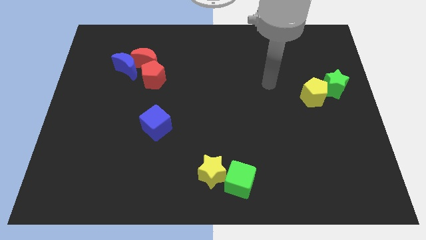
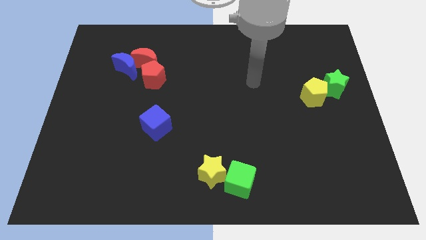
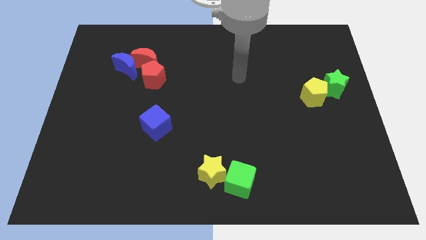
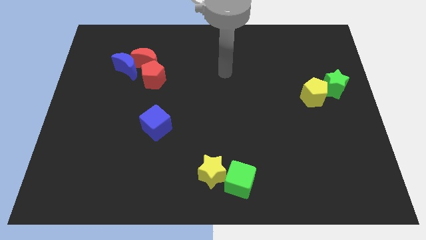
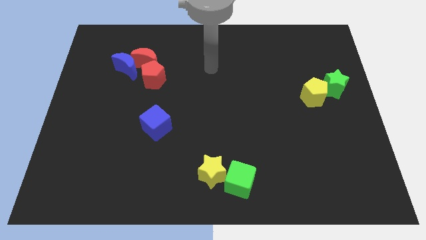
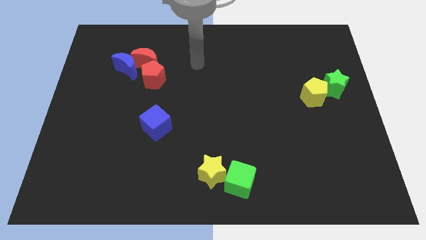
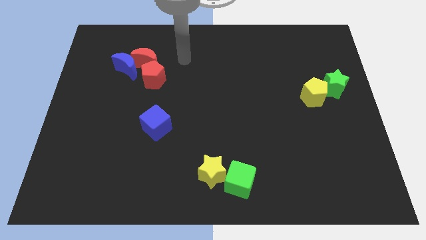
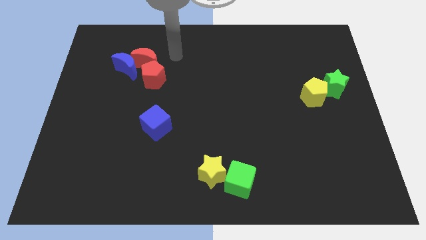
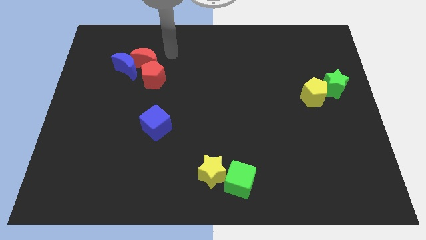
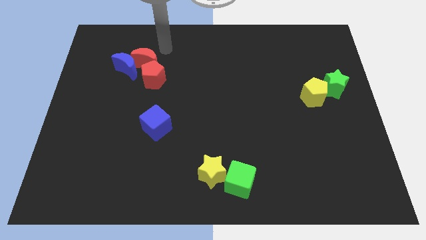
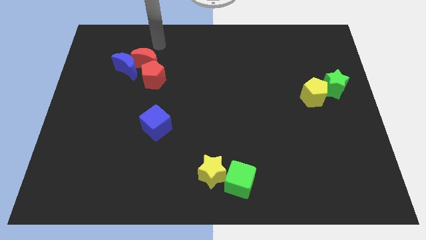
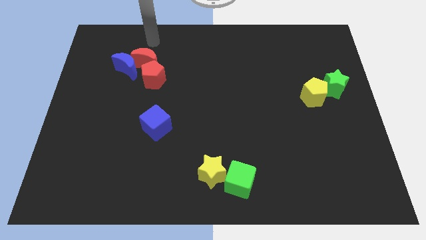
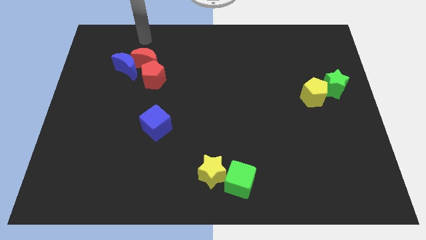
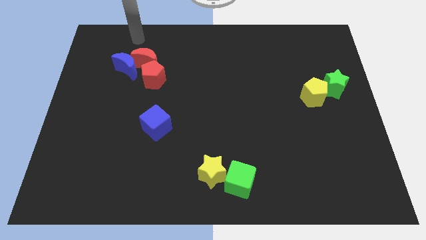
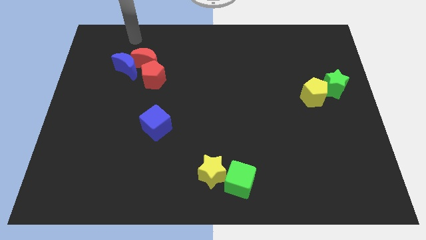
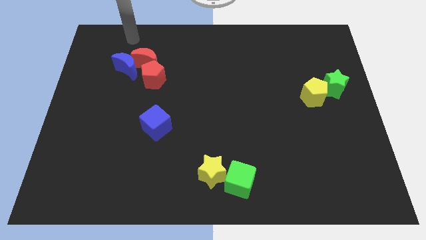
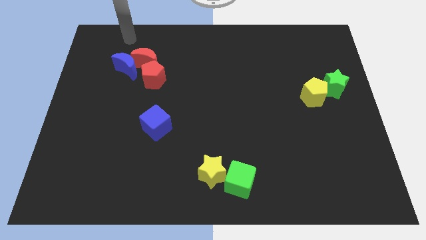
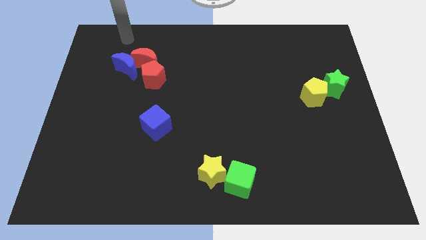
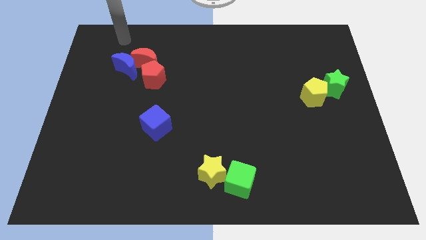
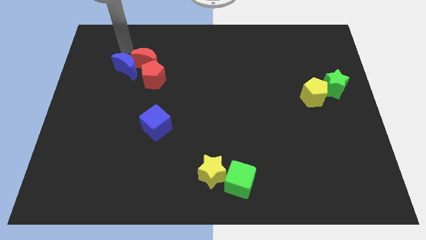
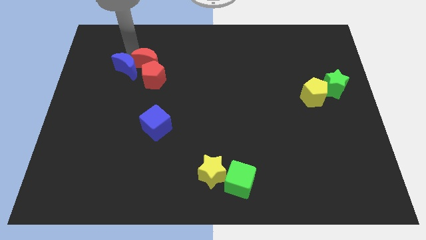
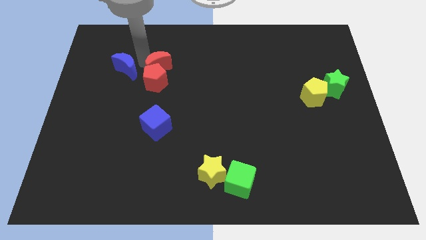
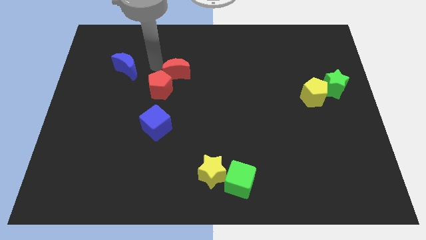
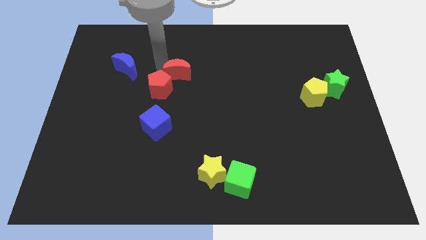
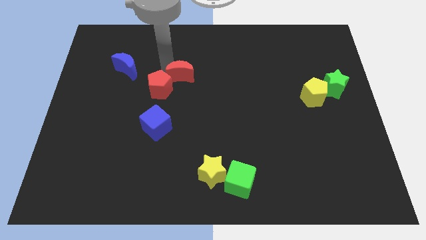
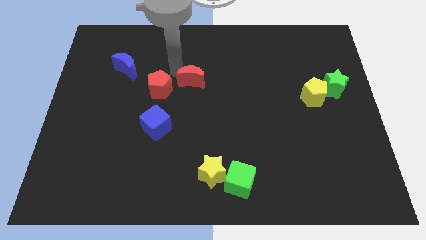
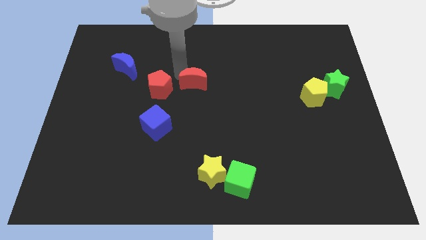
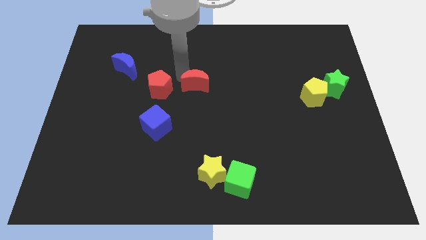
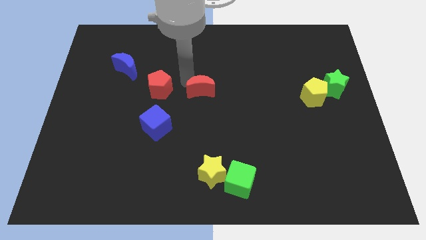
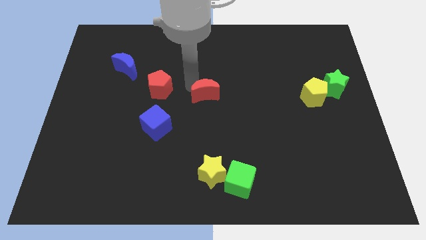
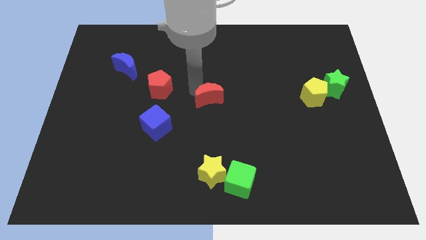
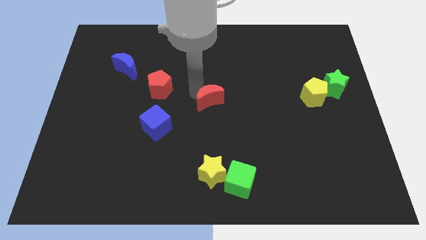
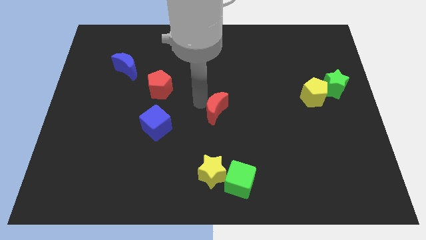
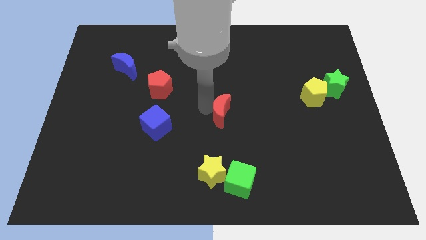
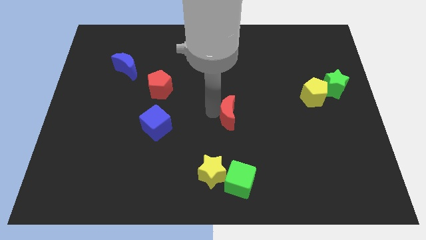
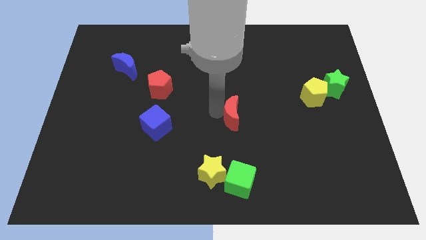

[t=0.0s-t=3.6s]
move the red crescent to the center of the board

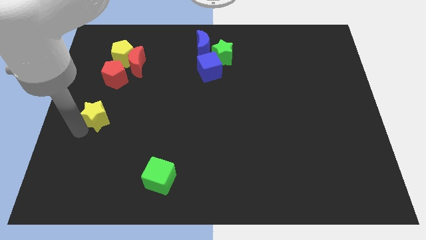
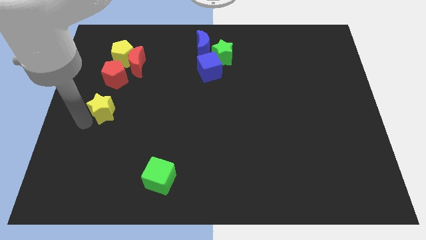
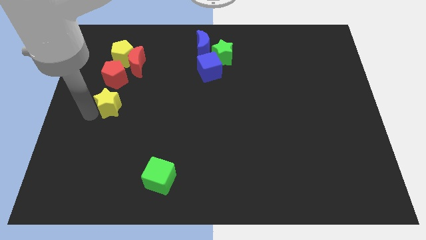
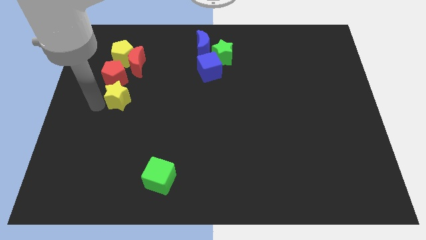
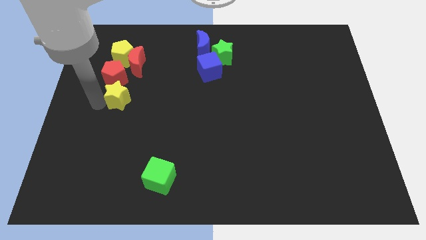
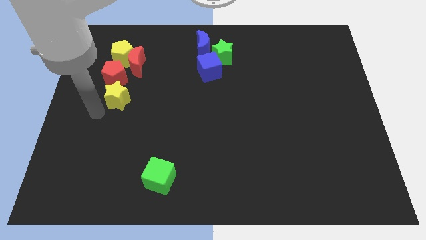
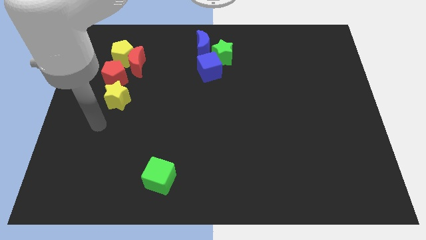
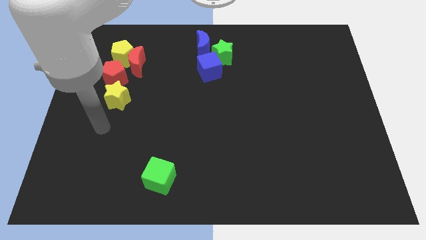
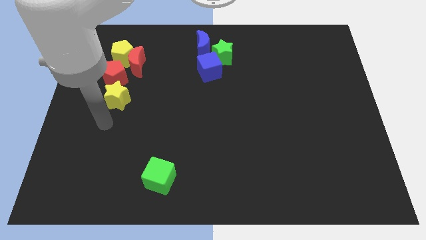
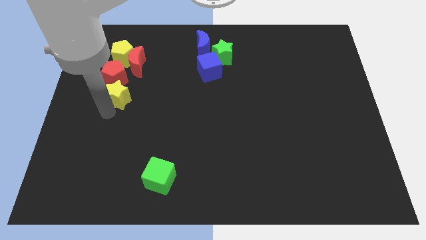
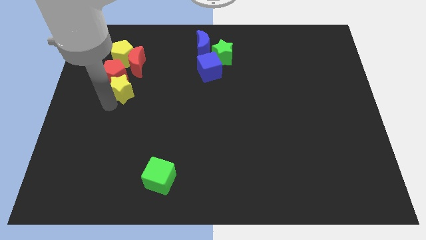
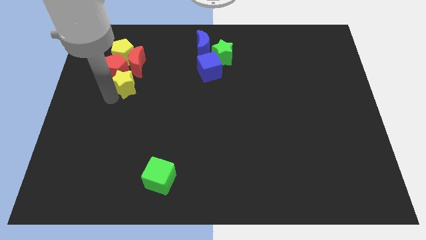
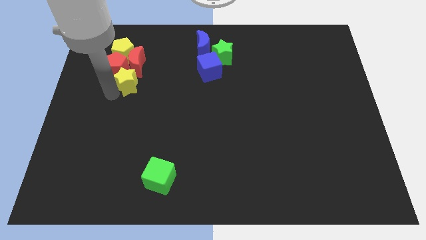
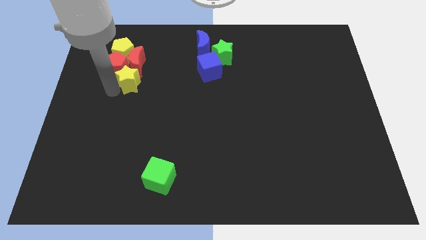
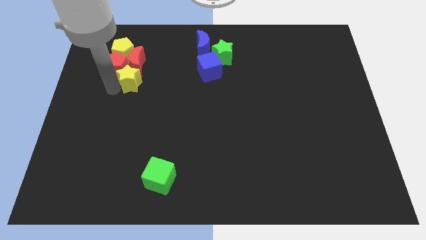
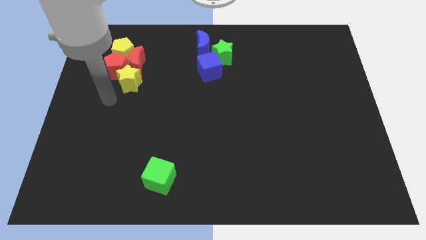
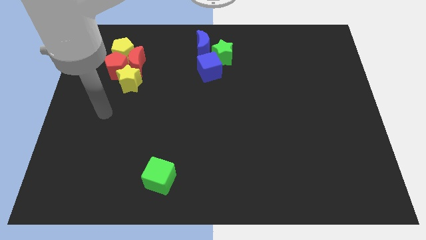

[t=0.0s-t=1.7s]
push the yellow star into the red blocks

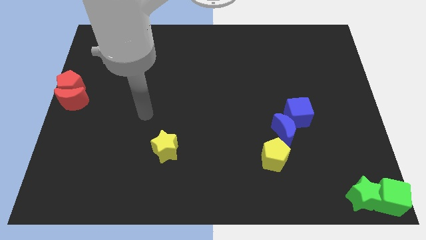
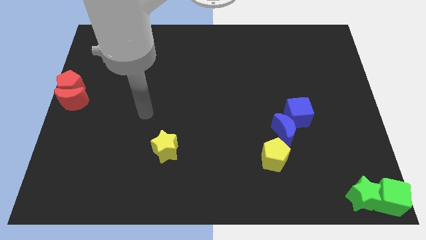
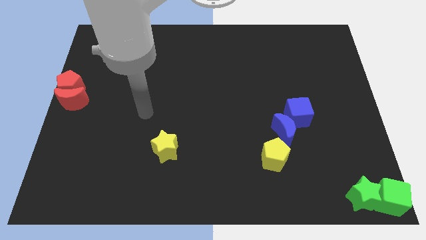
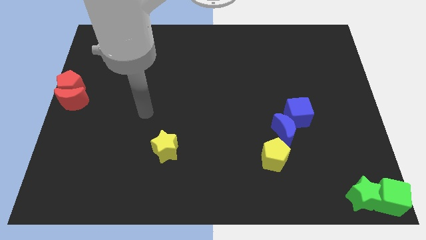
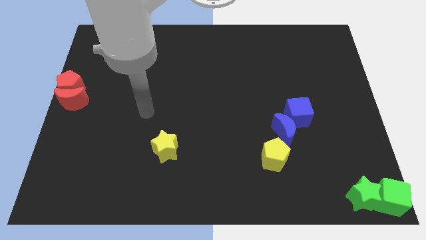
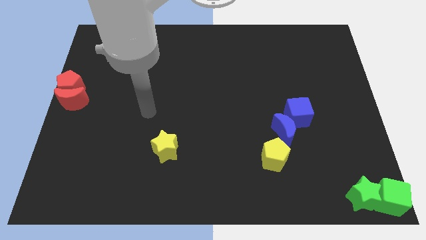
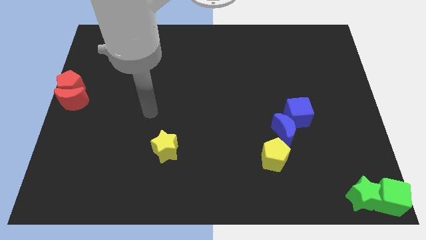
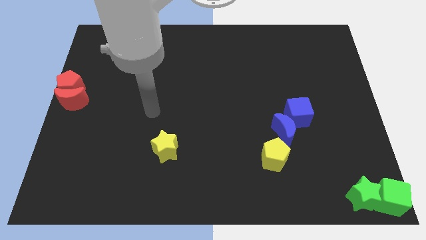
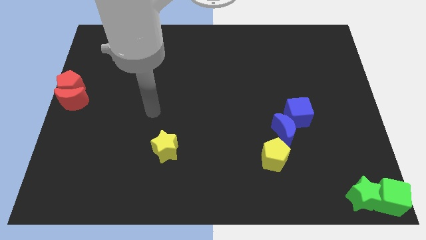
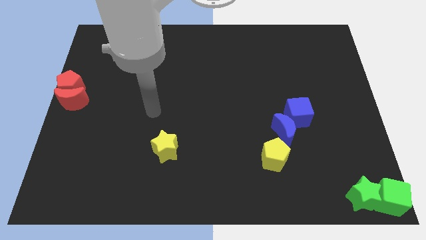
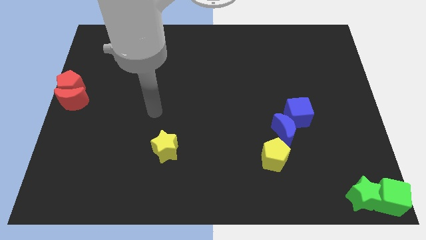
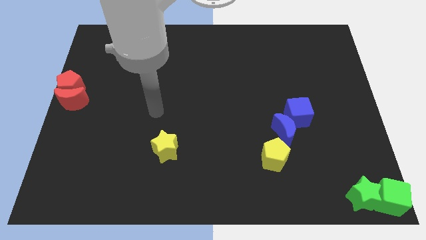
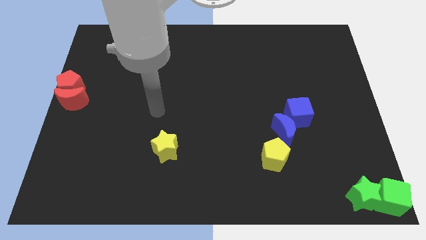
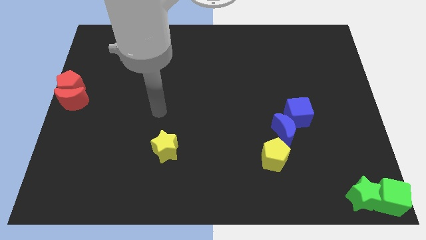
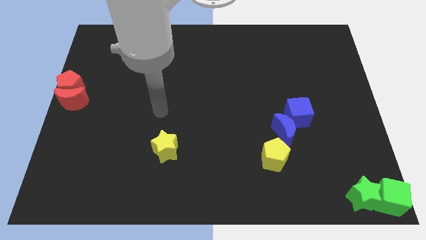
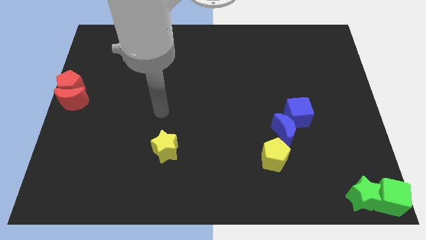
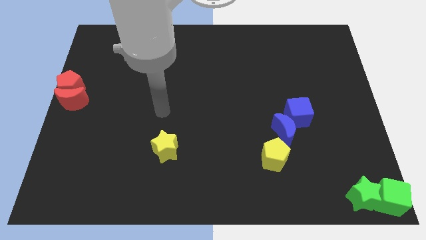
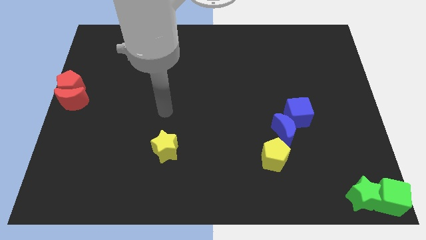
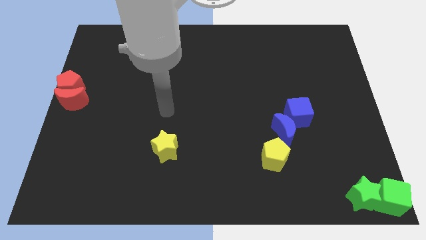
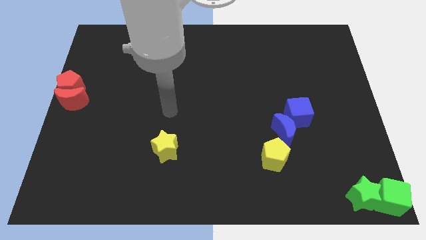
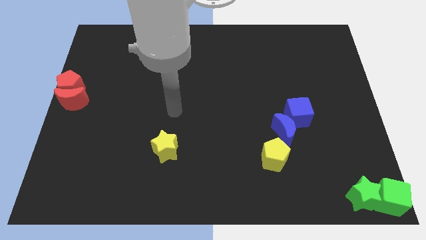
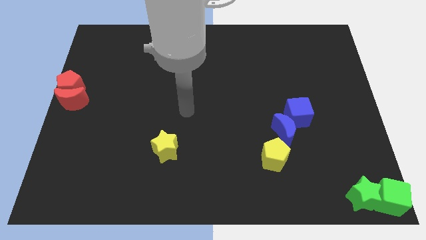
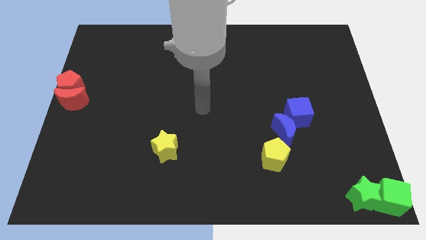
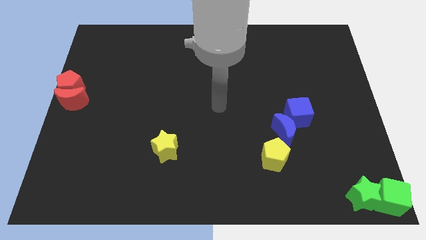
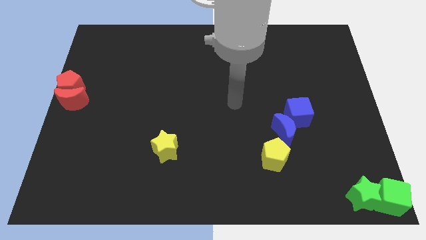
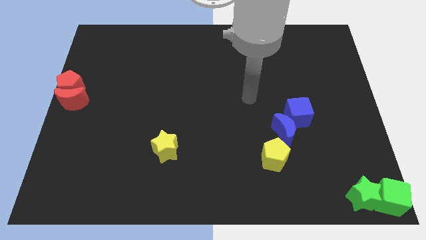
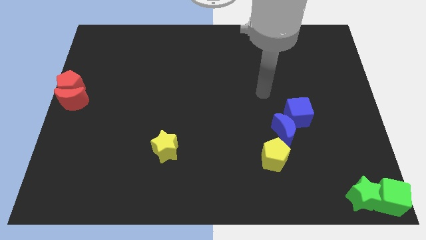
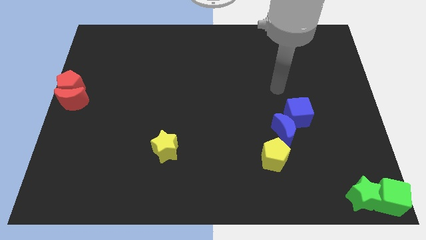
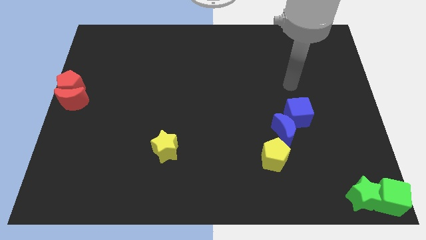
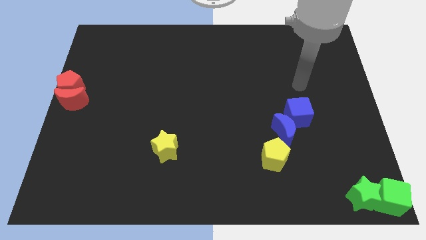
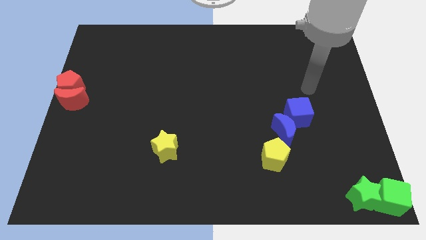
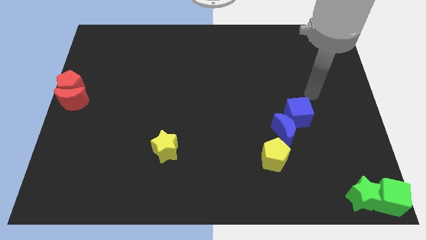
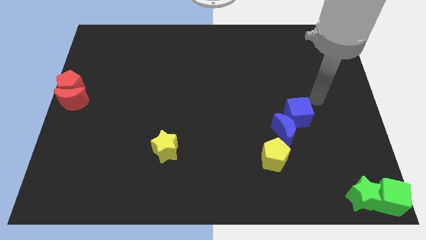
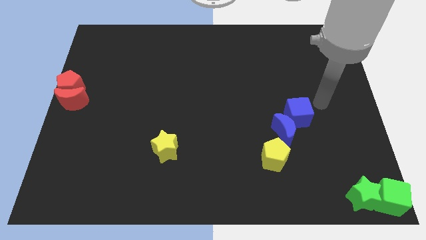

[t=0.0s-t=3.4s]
move your hand to the right of the blue cube

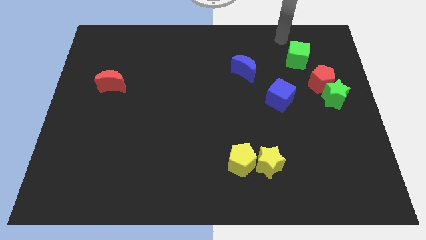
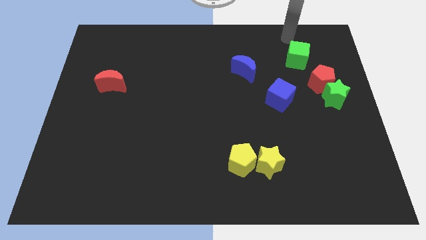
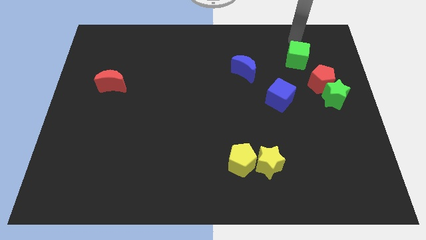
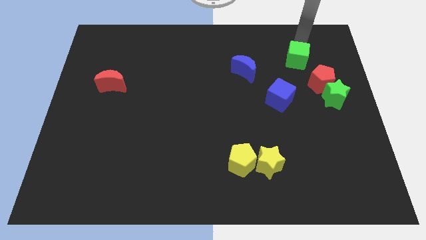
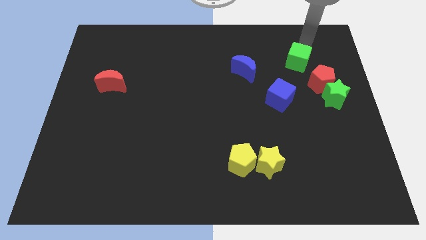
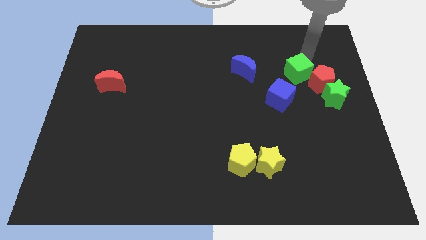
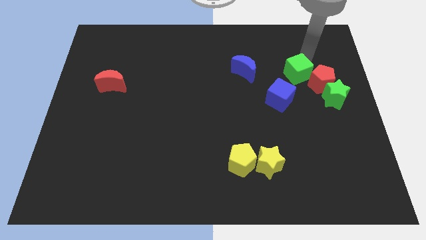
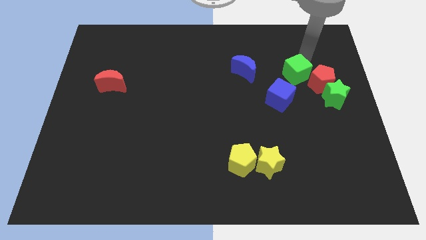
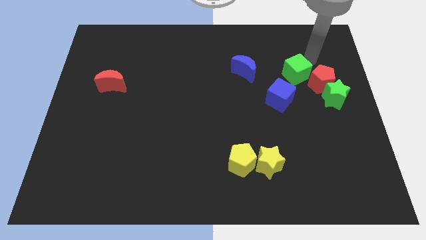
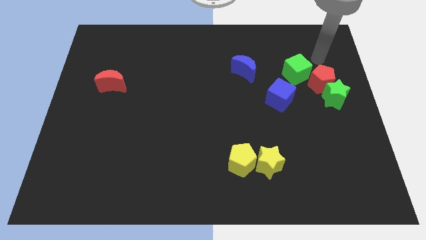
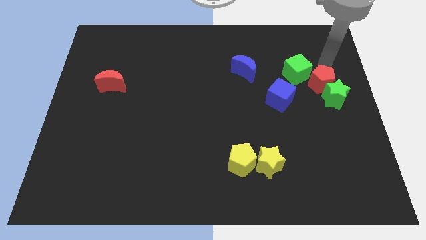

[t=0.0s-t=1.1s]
move green cube slightly towards the blue cube
